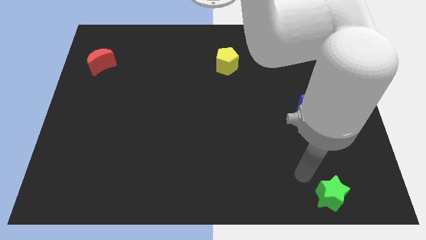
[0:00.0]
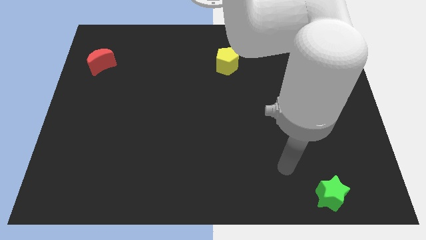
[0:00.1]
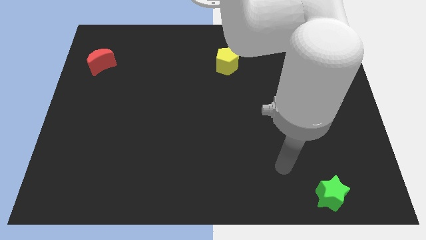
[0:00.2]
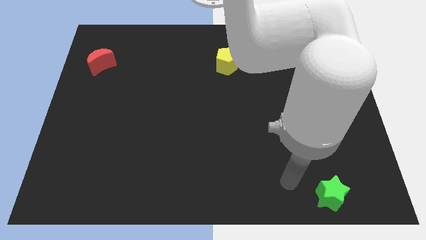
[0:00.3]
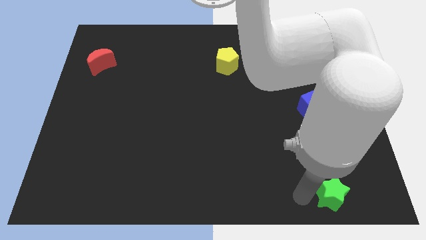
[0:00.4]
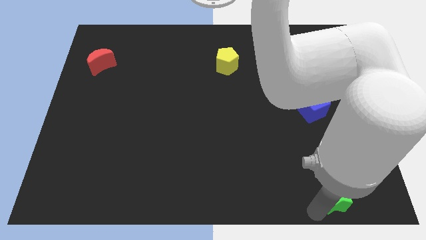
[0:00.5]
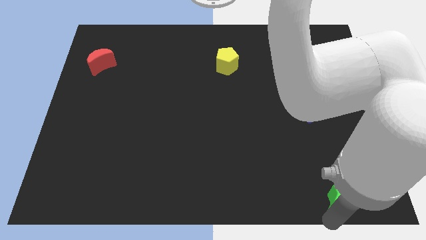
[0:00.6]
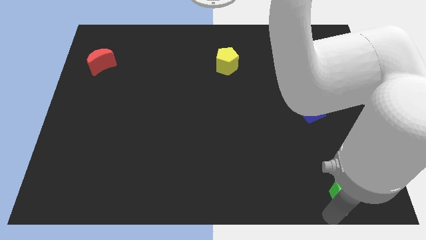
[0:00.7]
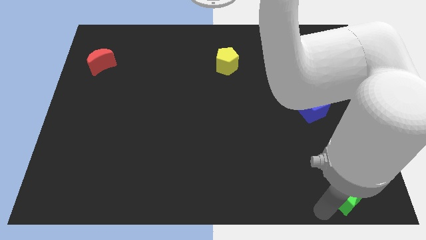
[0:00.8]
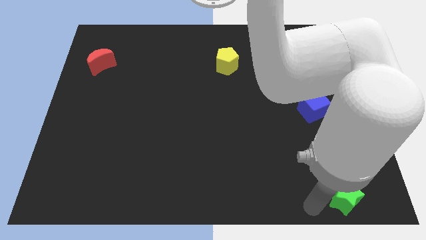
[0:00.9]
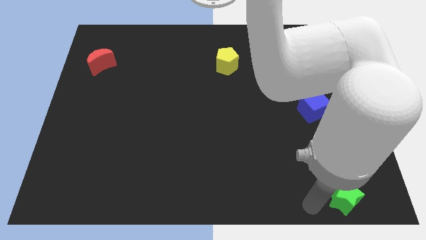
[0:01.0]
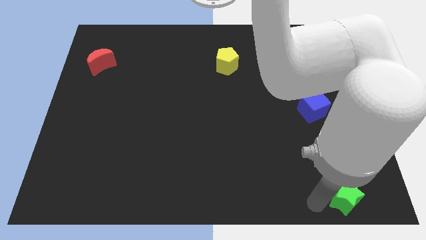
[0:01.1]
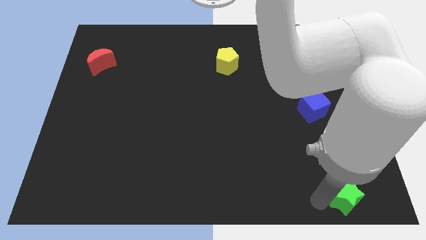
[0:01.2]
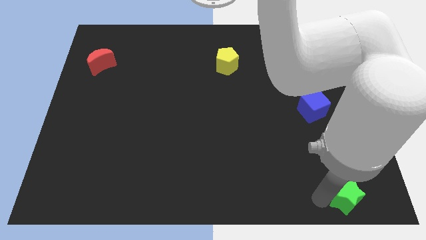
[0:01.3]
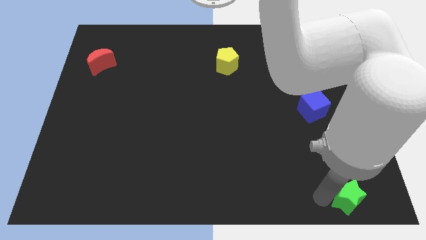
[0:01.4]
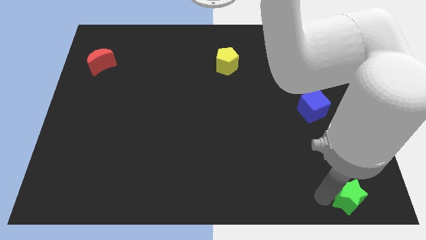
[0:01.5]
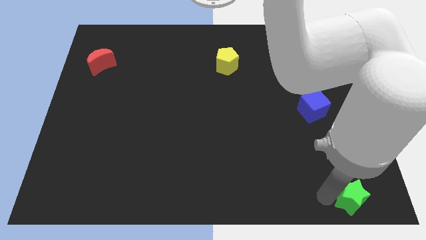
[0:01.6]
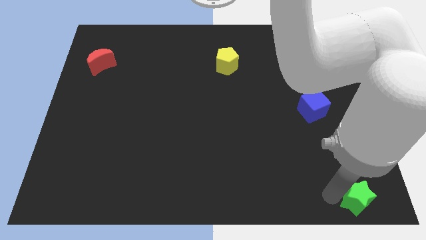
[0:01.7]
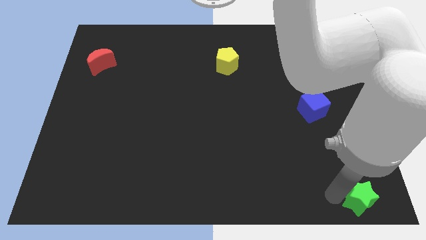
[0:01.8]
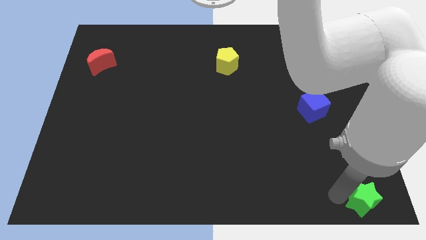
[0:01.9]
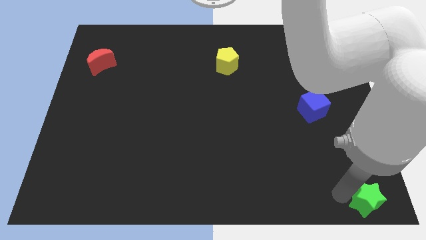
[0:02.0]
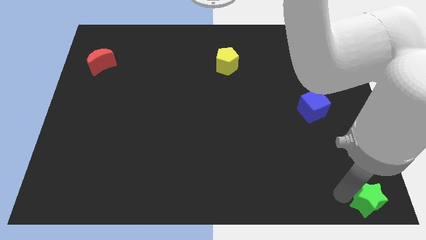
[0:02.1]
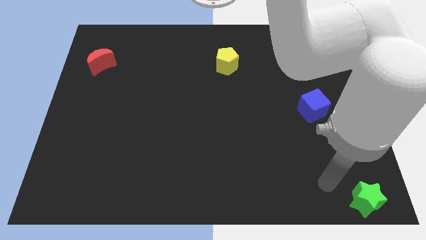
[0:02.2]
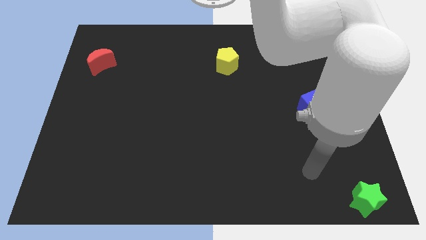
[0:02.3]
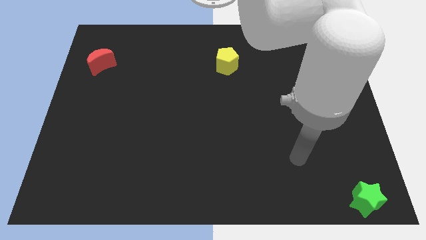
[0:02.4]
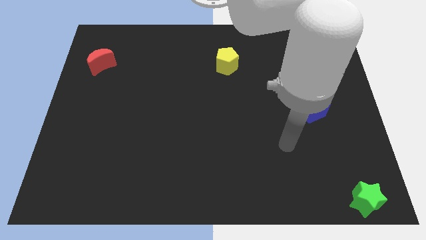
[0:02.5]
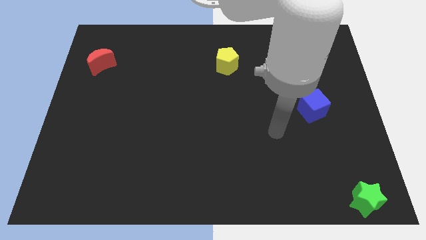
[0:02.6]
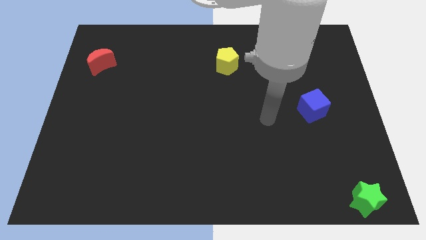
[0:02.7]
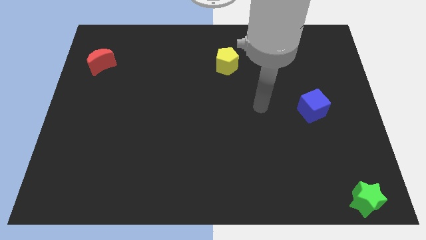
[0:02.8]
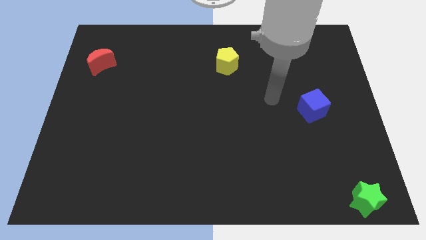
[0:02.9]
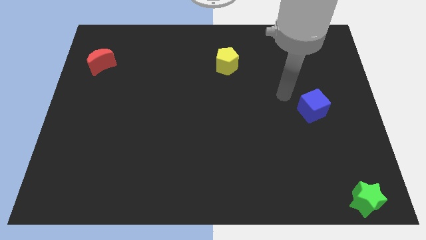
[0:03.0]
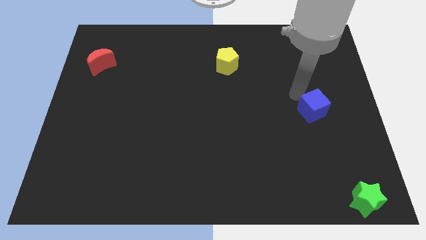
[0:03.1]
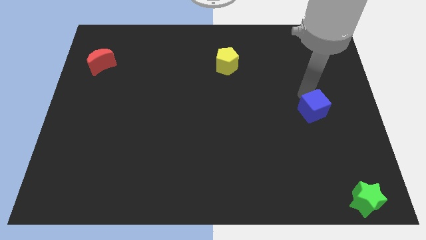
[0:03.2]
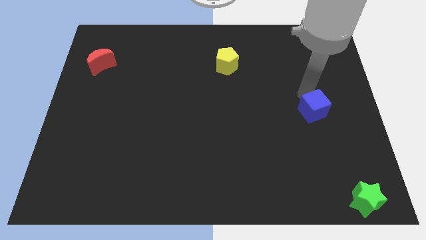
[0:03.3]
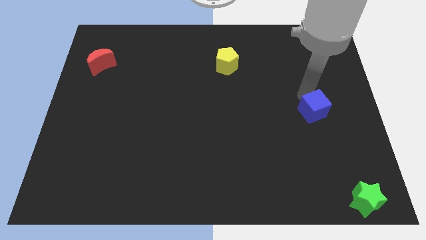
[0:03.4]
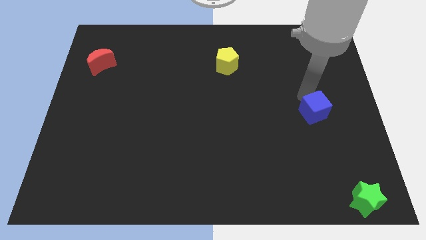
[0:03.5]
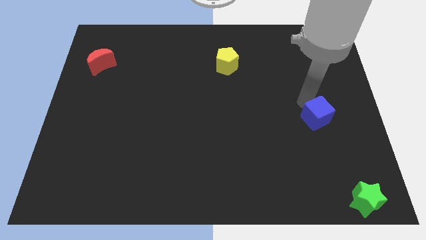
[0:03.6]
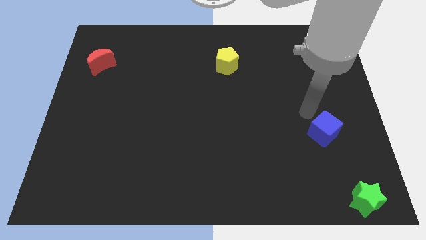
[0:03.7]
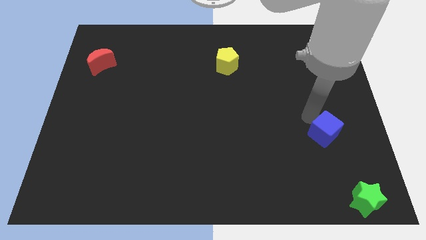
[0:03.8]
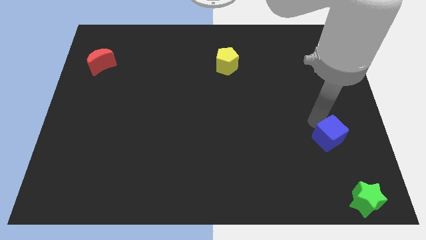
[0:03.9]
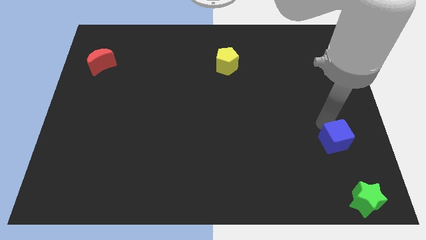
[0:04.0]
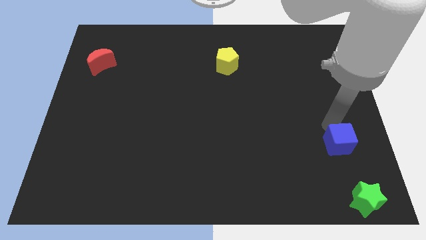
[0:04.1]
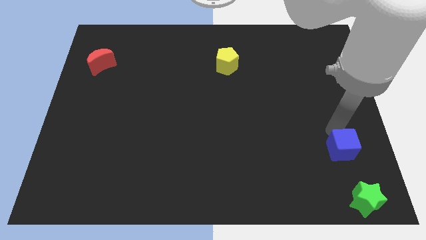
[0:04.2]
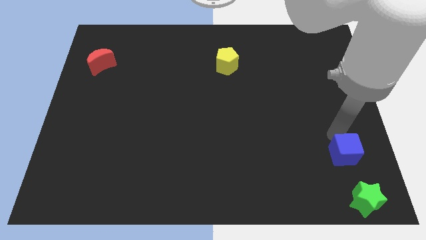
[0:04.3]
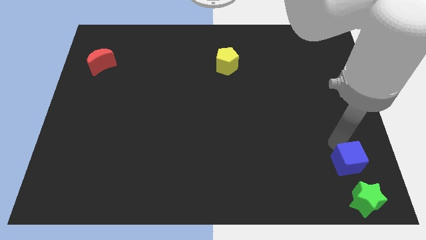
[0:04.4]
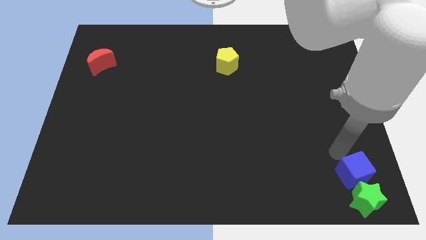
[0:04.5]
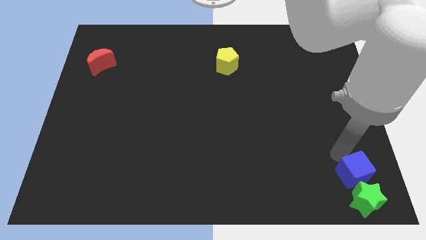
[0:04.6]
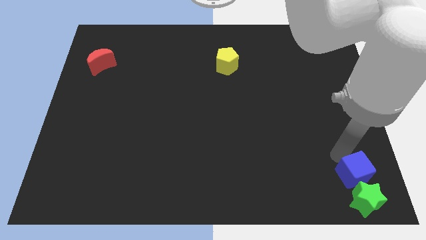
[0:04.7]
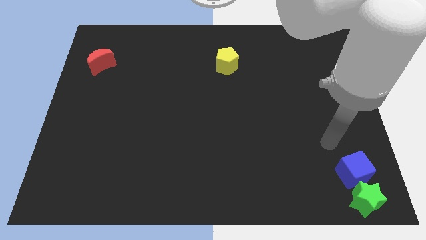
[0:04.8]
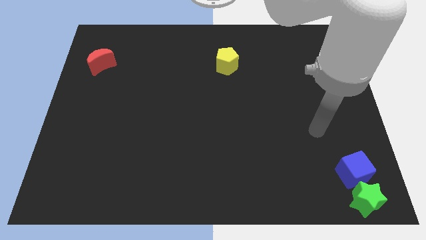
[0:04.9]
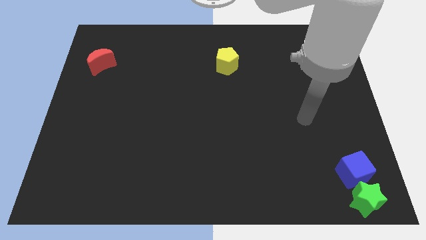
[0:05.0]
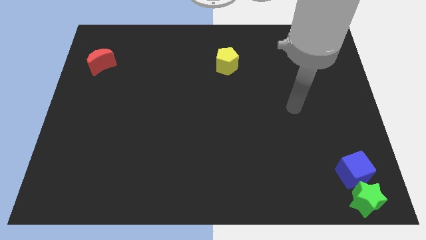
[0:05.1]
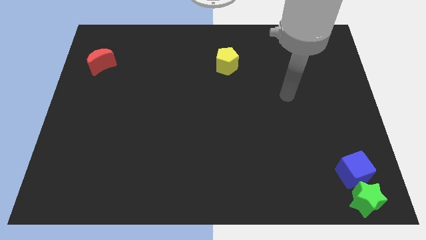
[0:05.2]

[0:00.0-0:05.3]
put the green star and blue cube at the bottom right of the board

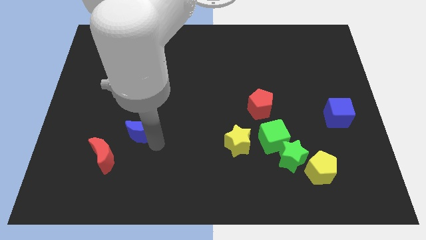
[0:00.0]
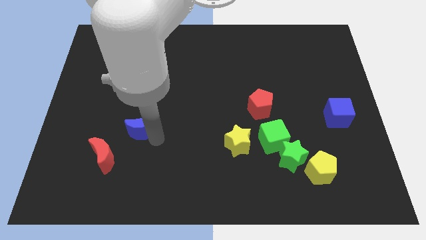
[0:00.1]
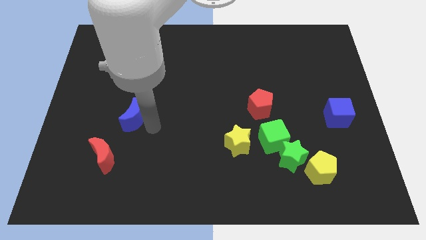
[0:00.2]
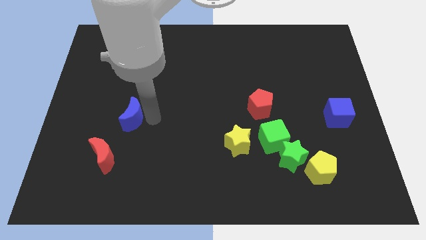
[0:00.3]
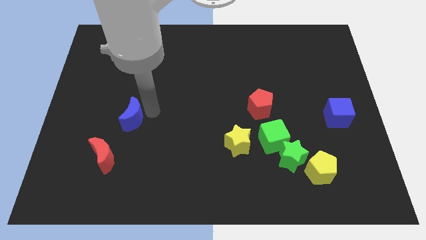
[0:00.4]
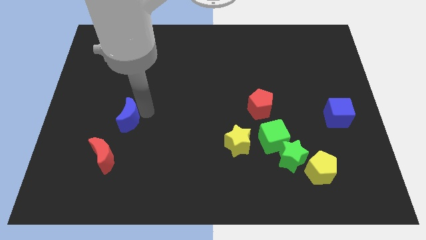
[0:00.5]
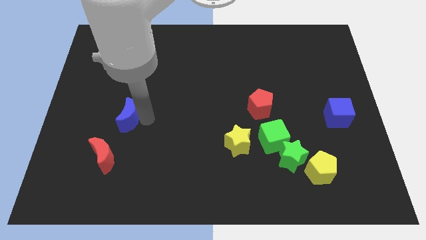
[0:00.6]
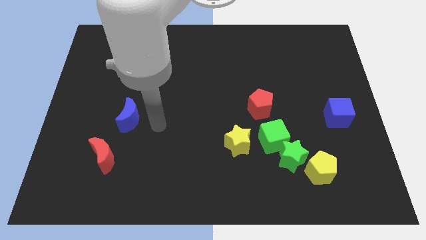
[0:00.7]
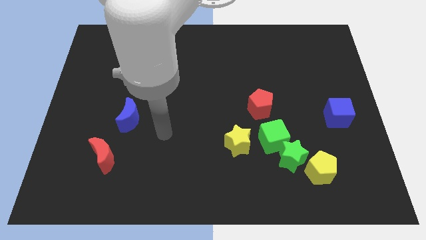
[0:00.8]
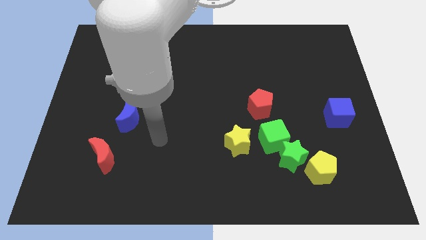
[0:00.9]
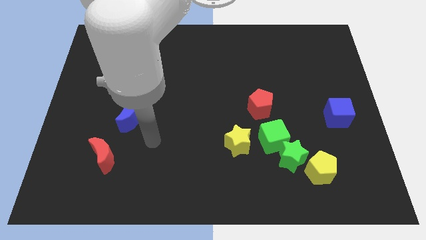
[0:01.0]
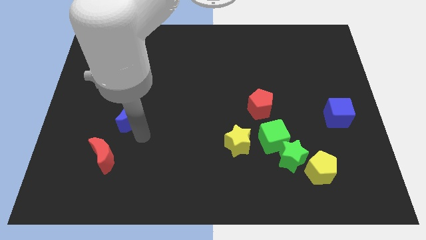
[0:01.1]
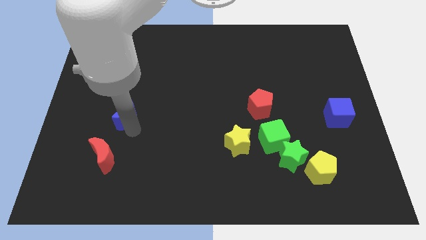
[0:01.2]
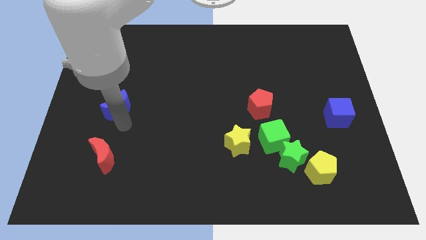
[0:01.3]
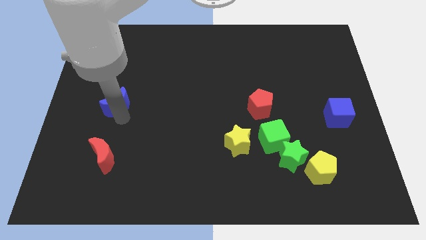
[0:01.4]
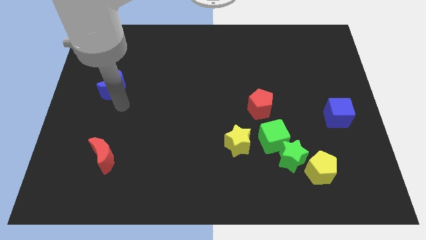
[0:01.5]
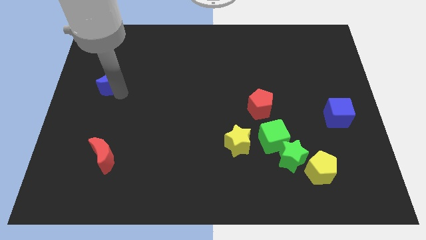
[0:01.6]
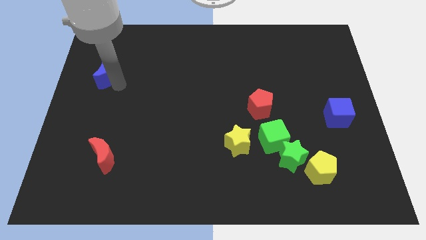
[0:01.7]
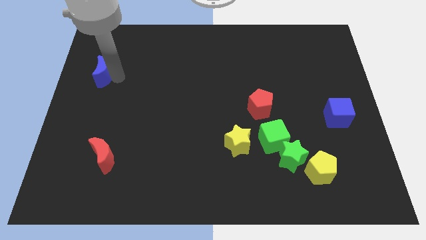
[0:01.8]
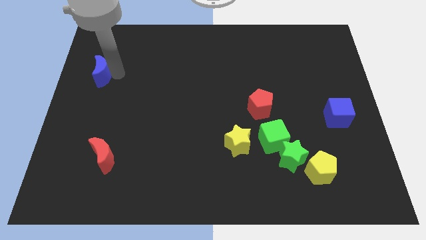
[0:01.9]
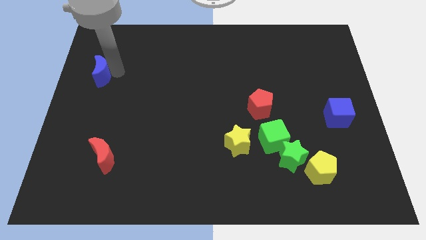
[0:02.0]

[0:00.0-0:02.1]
place the blue moon vertically above the red moon

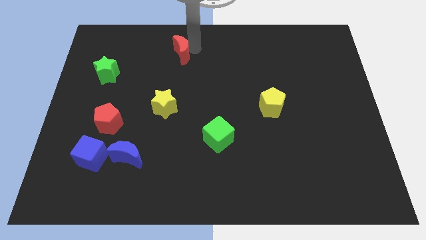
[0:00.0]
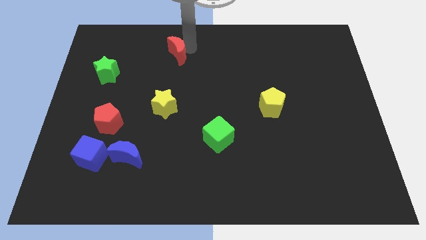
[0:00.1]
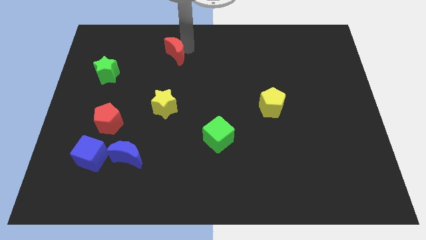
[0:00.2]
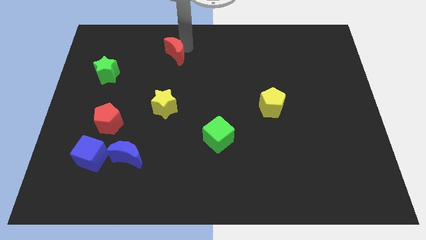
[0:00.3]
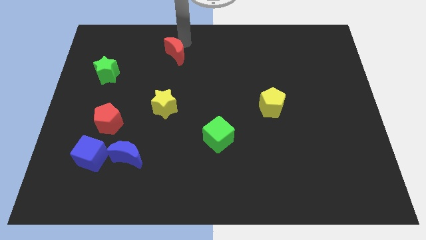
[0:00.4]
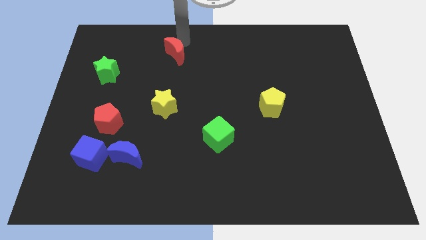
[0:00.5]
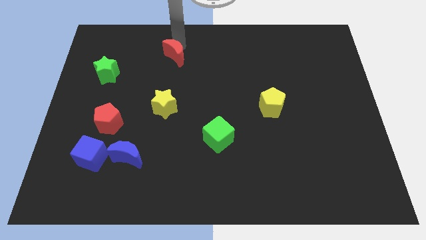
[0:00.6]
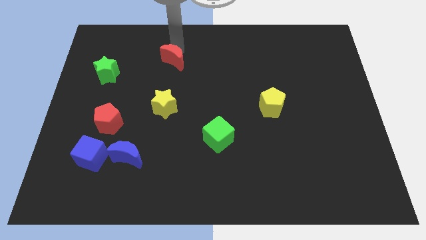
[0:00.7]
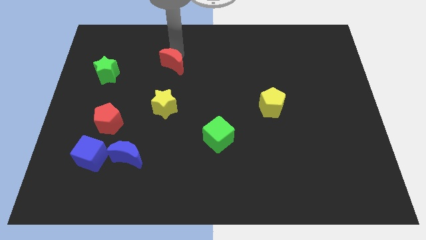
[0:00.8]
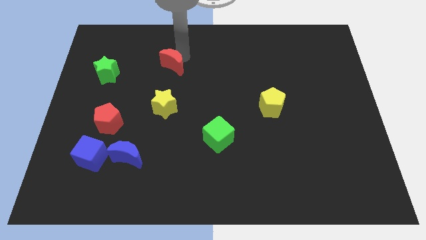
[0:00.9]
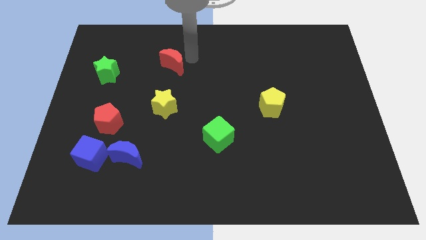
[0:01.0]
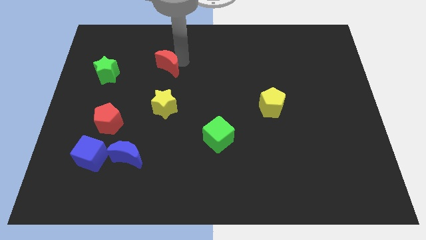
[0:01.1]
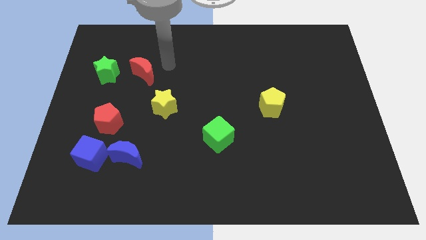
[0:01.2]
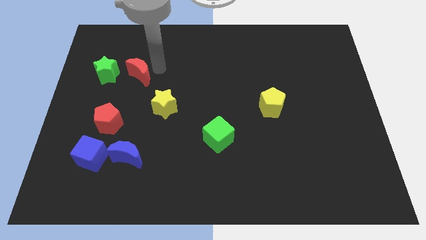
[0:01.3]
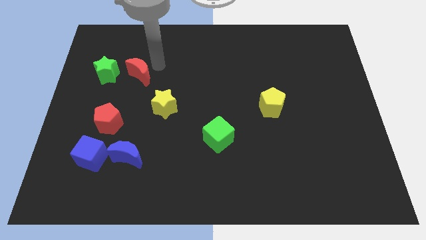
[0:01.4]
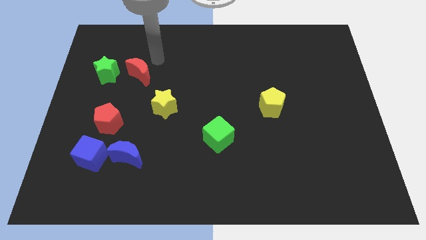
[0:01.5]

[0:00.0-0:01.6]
put the red moon at the right side of the green star
